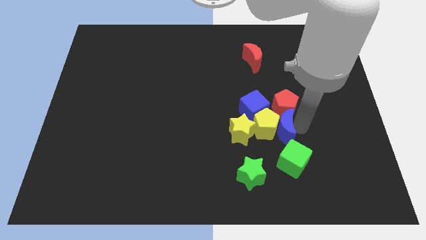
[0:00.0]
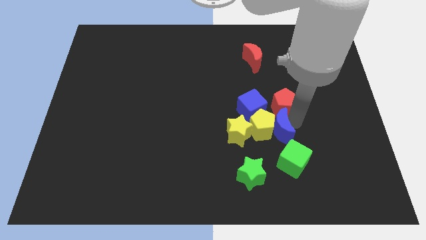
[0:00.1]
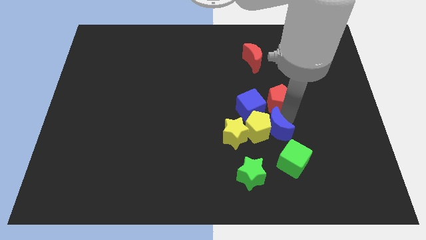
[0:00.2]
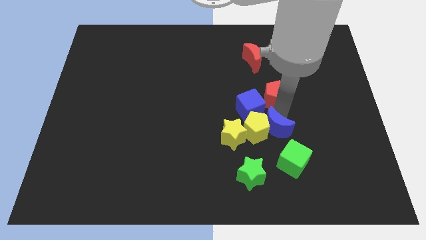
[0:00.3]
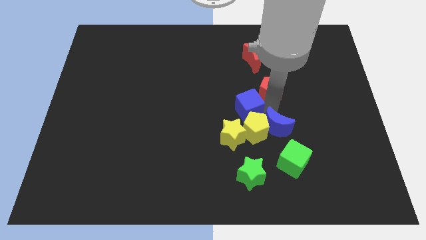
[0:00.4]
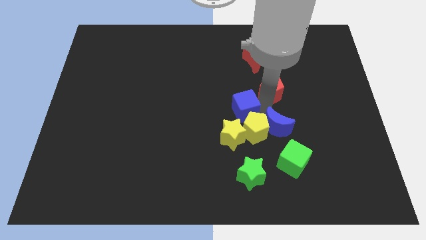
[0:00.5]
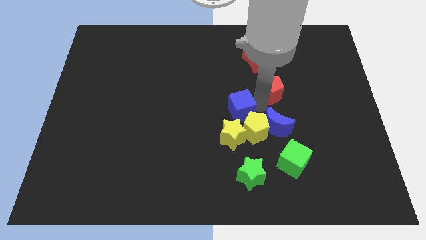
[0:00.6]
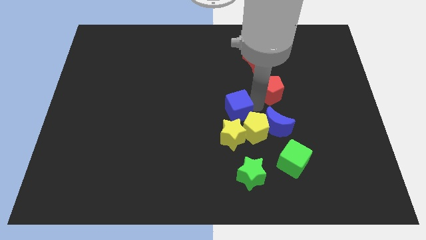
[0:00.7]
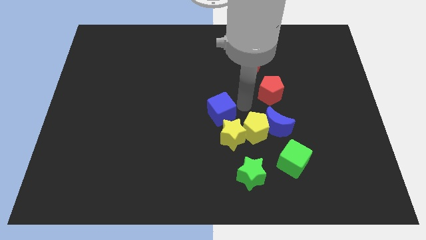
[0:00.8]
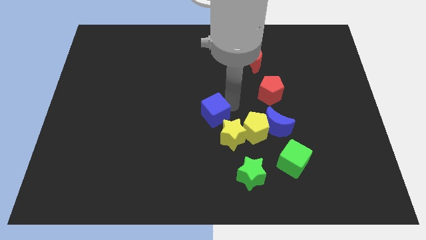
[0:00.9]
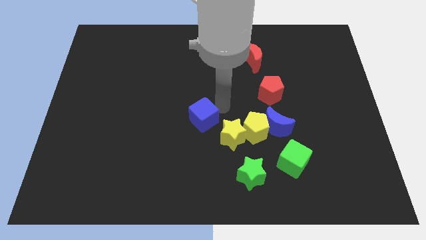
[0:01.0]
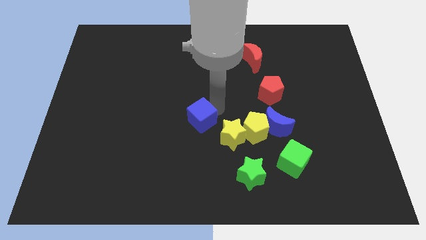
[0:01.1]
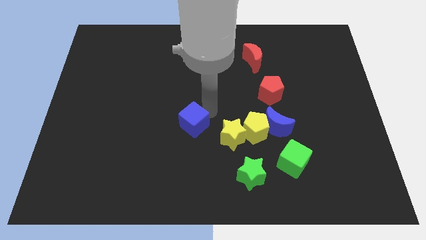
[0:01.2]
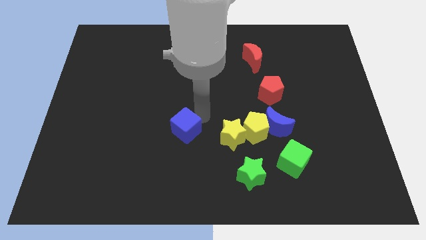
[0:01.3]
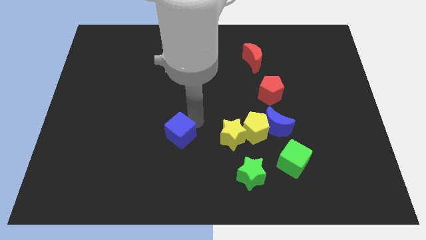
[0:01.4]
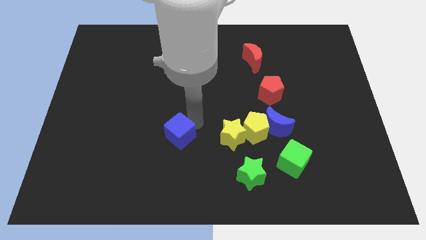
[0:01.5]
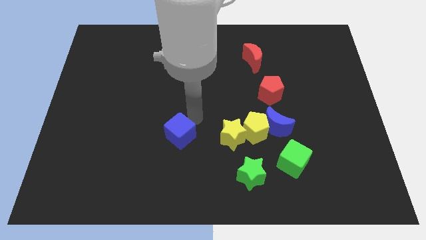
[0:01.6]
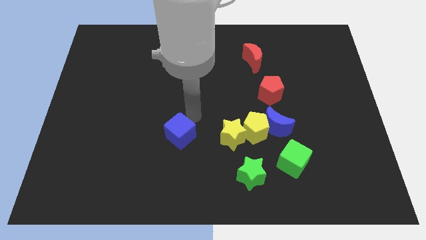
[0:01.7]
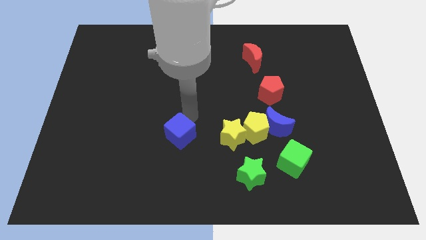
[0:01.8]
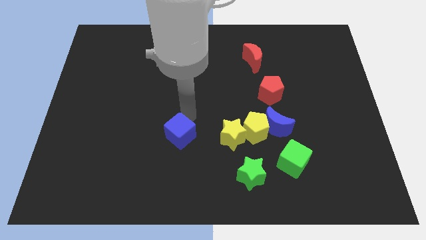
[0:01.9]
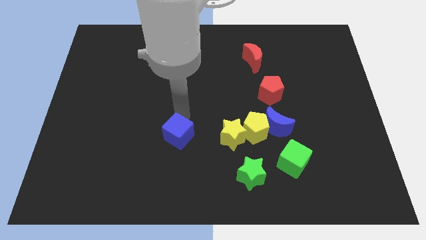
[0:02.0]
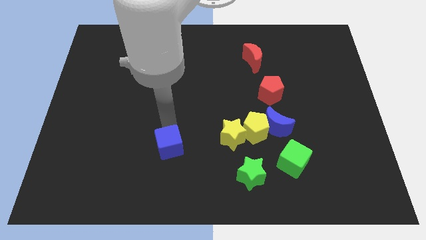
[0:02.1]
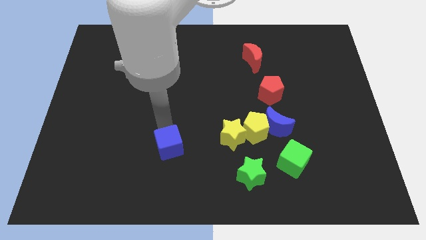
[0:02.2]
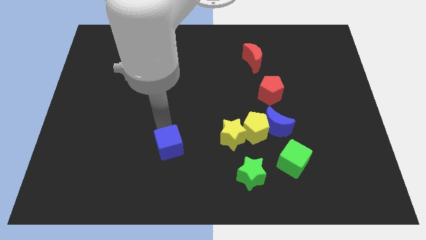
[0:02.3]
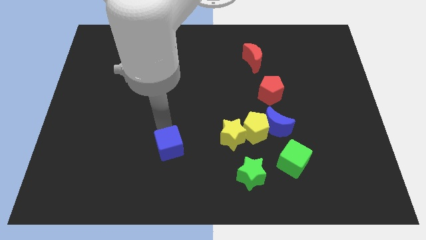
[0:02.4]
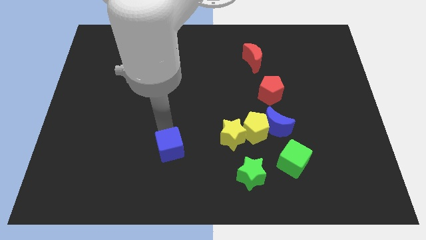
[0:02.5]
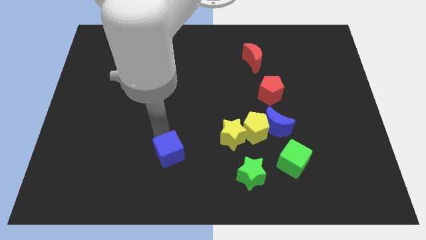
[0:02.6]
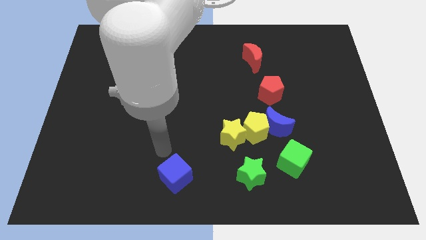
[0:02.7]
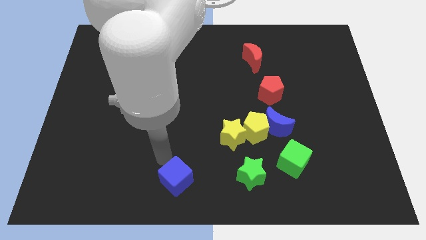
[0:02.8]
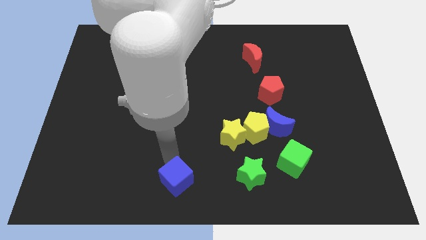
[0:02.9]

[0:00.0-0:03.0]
place blue cube to the left of green star

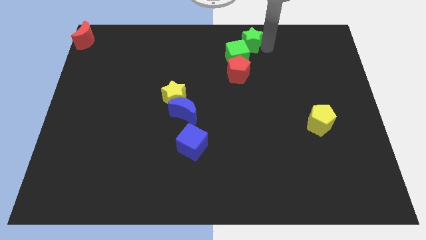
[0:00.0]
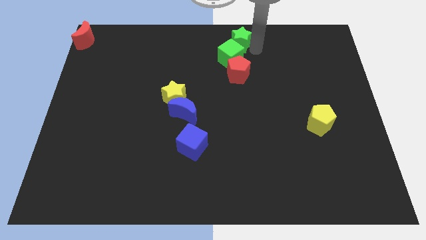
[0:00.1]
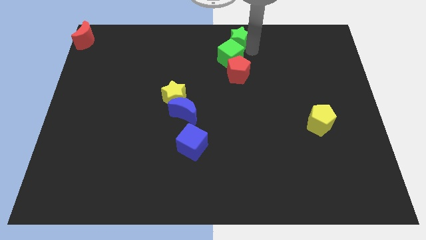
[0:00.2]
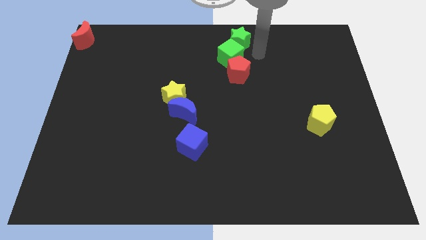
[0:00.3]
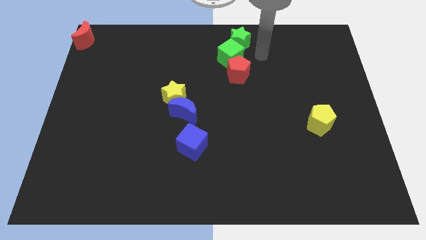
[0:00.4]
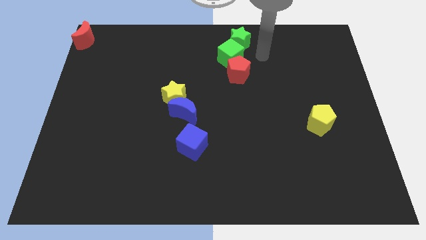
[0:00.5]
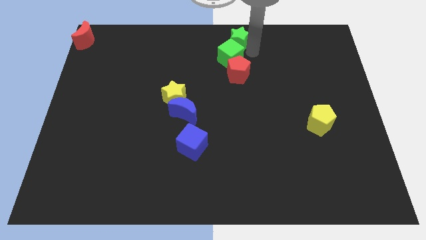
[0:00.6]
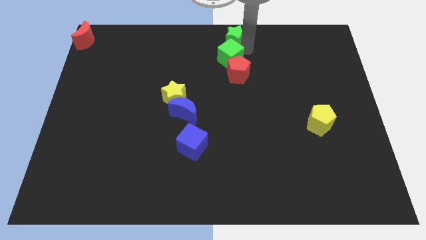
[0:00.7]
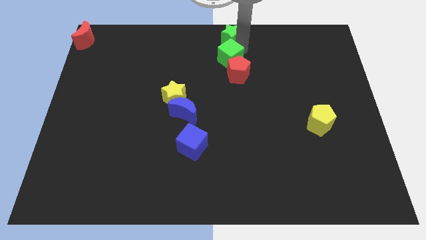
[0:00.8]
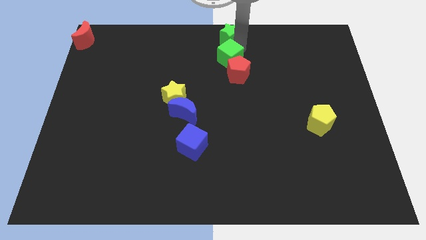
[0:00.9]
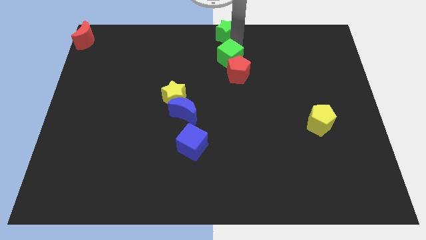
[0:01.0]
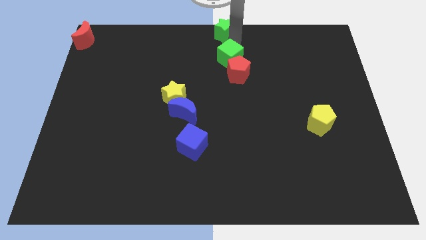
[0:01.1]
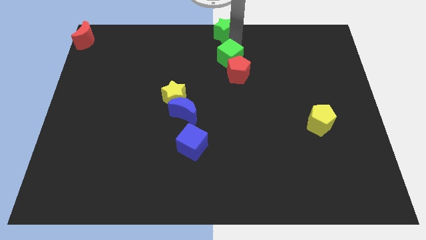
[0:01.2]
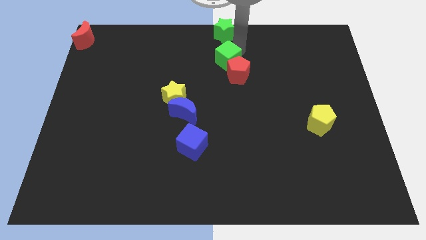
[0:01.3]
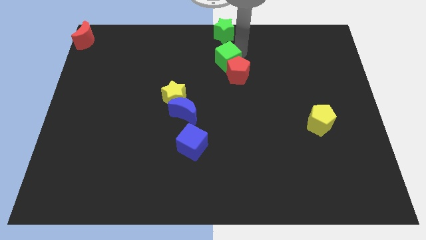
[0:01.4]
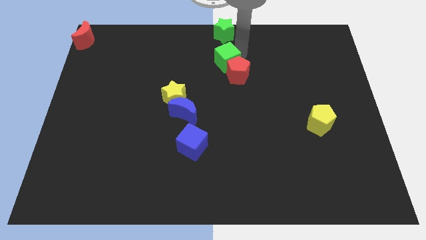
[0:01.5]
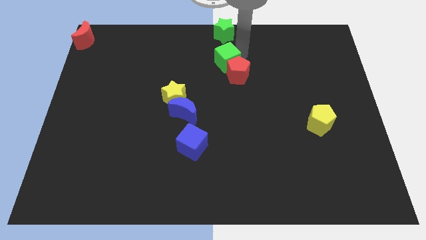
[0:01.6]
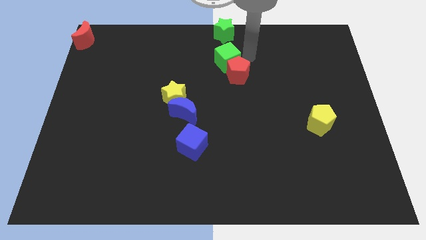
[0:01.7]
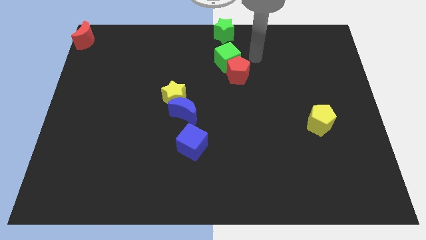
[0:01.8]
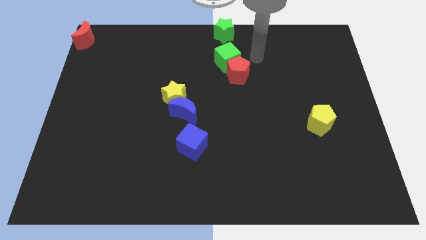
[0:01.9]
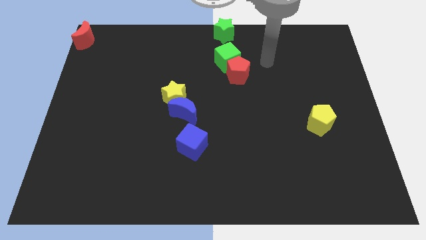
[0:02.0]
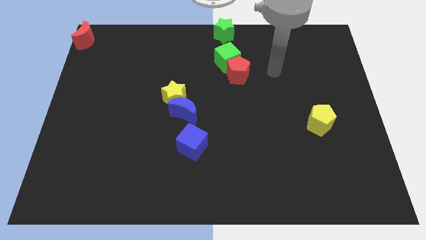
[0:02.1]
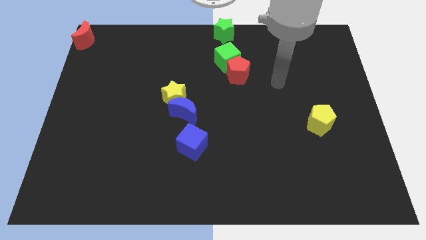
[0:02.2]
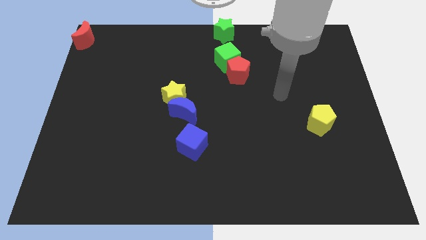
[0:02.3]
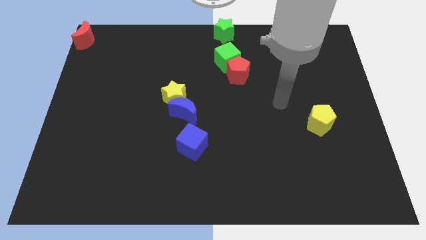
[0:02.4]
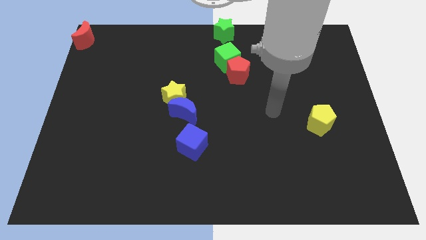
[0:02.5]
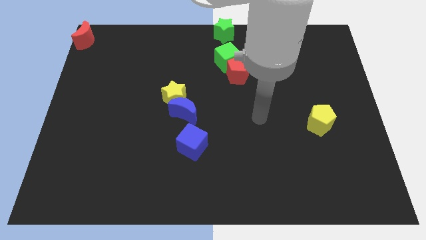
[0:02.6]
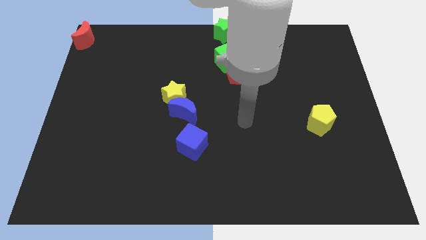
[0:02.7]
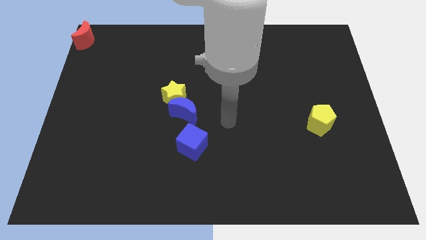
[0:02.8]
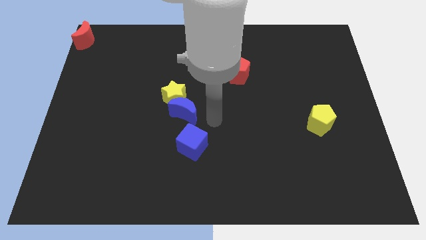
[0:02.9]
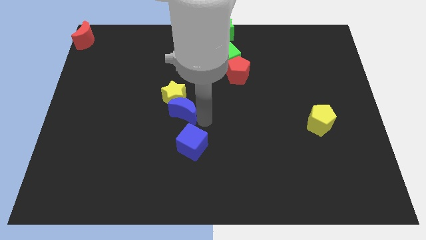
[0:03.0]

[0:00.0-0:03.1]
move the green star to the centerof the board

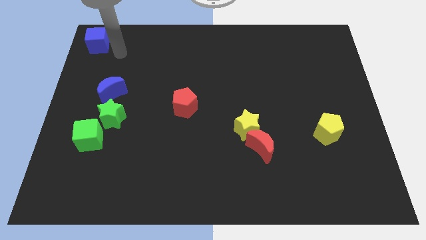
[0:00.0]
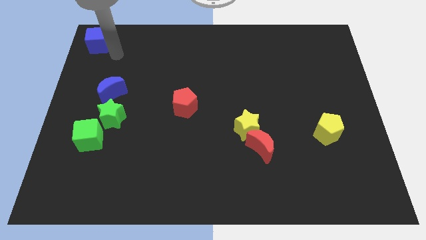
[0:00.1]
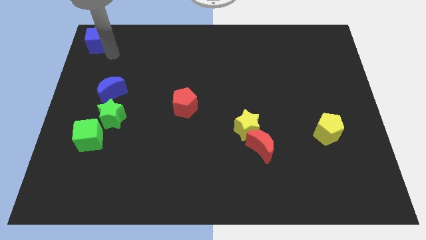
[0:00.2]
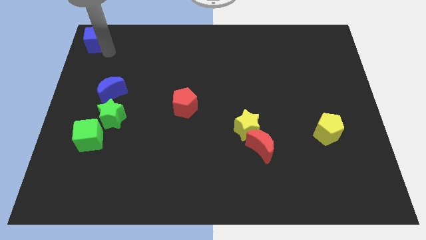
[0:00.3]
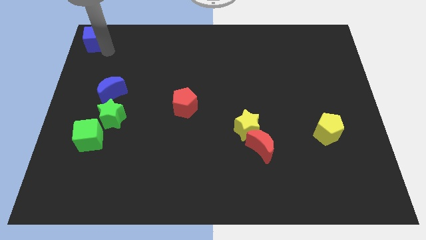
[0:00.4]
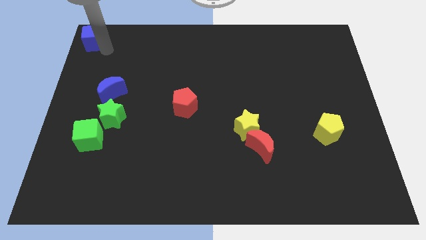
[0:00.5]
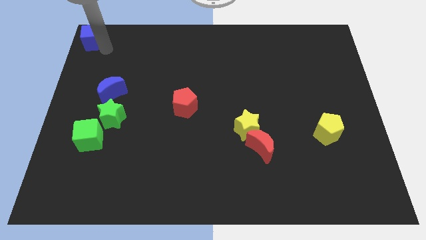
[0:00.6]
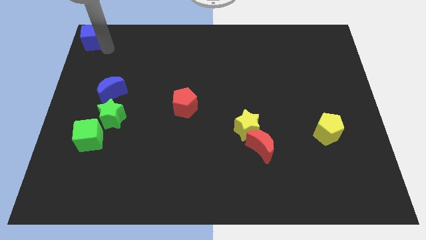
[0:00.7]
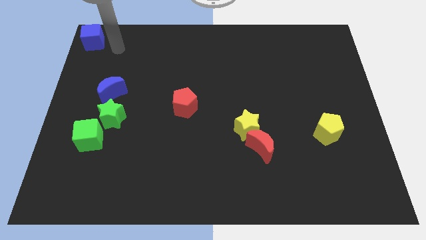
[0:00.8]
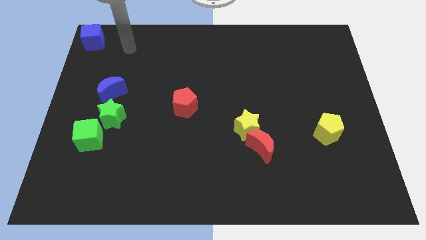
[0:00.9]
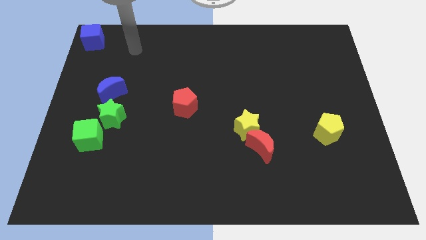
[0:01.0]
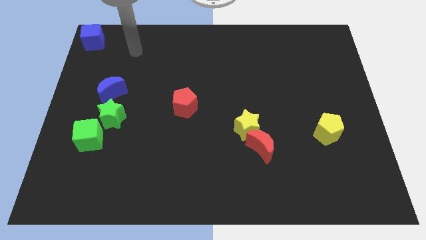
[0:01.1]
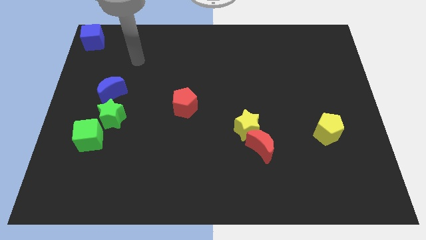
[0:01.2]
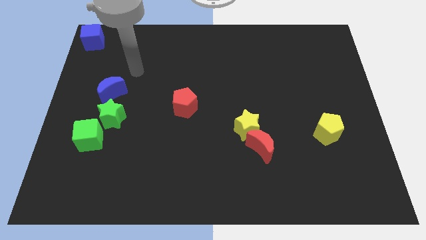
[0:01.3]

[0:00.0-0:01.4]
push the blue cube slightly to the top left corner of the board

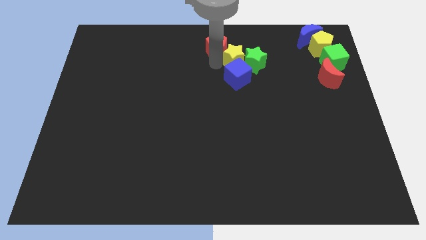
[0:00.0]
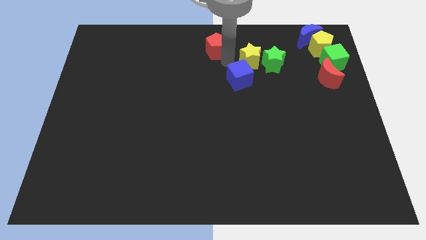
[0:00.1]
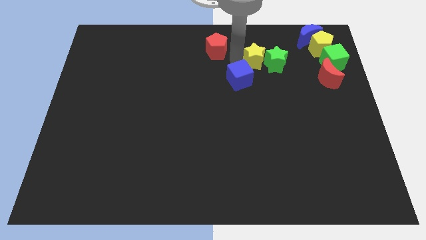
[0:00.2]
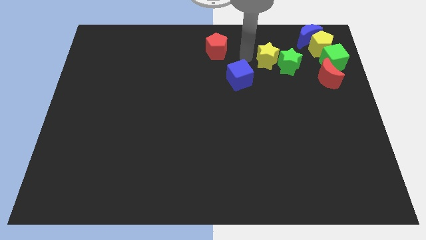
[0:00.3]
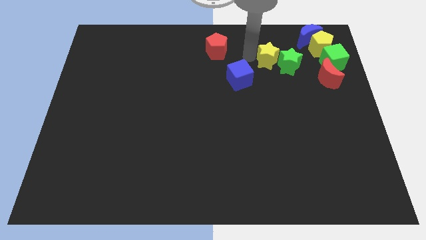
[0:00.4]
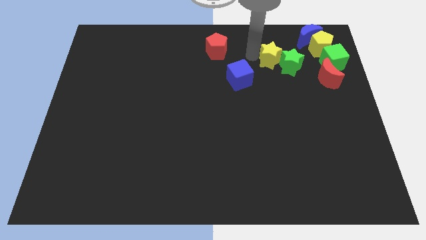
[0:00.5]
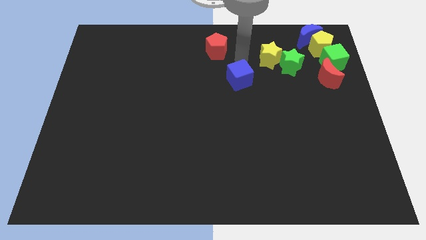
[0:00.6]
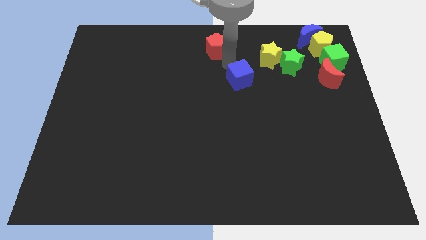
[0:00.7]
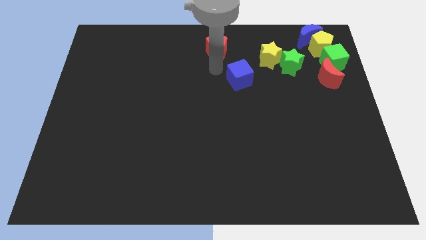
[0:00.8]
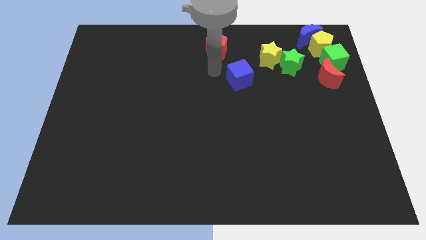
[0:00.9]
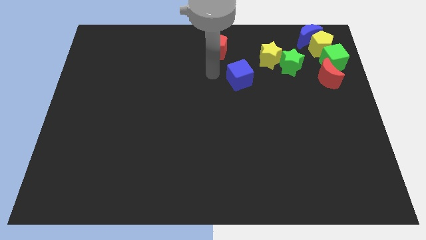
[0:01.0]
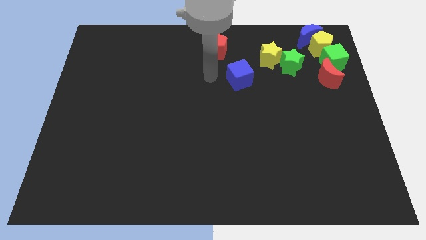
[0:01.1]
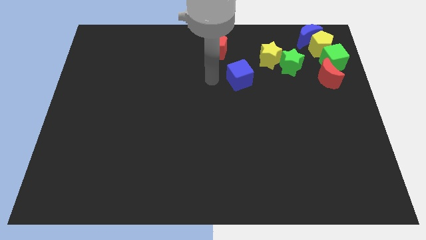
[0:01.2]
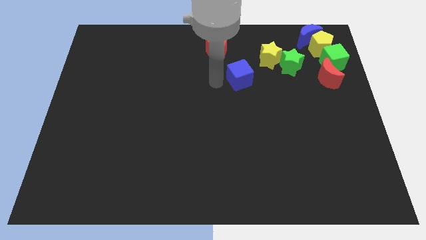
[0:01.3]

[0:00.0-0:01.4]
move yellow and green star towards the right side of the board
